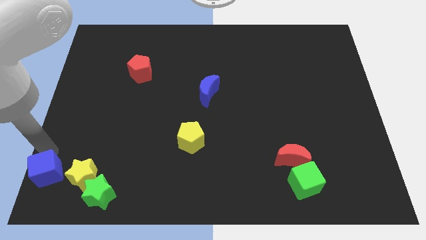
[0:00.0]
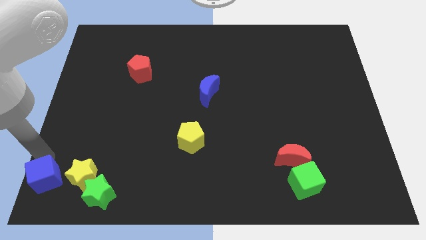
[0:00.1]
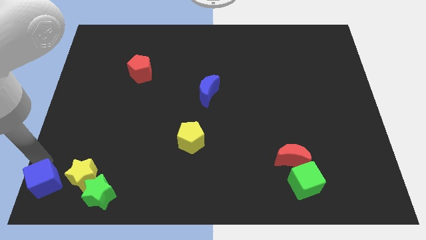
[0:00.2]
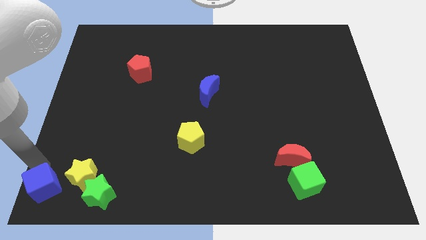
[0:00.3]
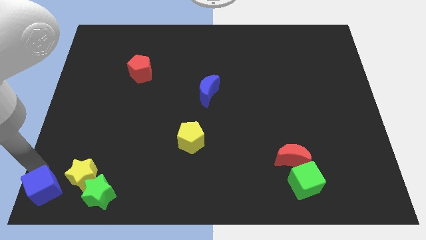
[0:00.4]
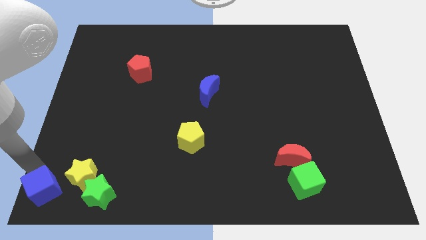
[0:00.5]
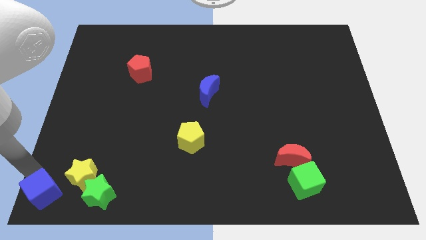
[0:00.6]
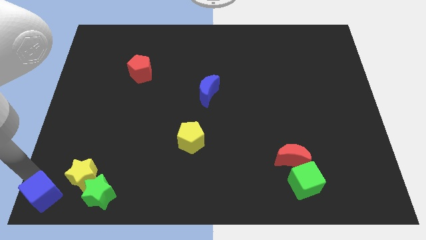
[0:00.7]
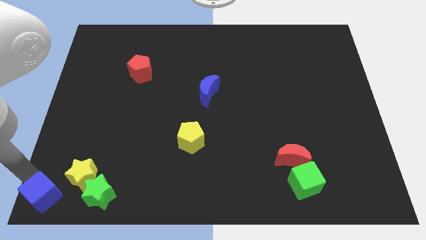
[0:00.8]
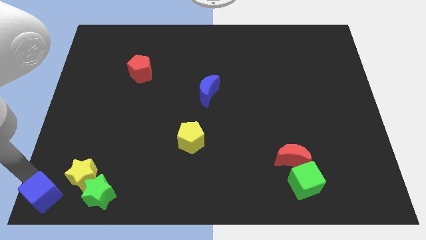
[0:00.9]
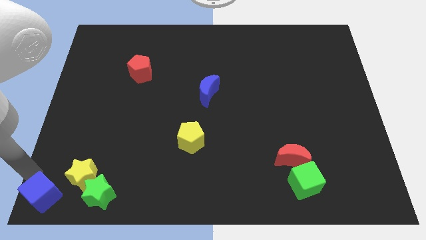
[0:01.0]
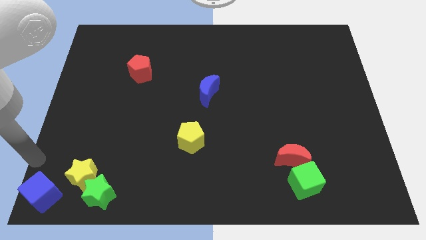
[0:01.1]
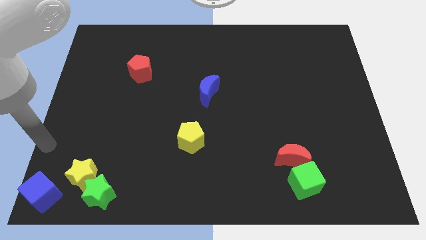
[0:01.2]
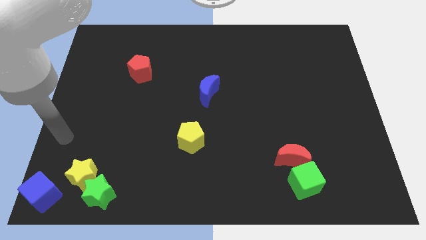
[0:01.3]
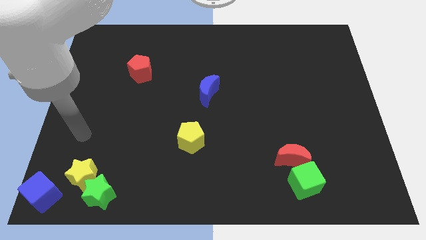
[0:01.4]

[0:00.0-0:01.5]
move the blue cube to the bottom left of the board

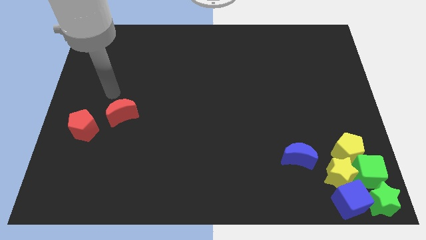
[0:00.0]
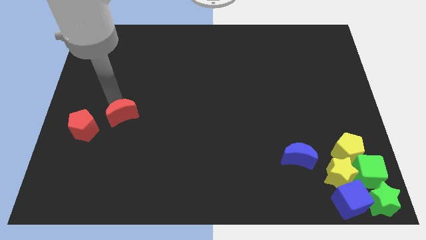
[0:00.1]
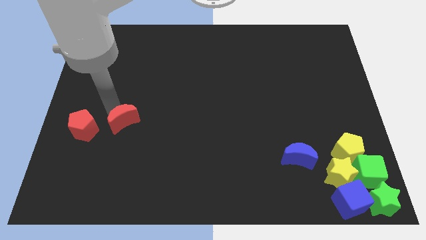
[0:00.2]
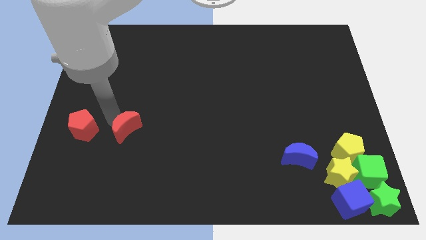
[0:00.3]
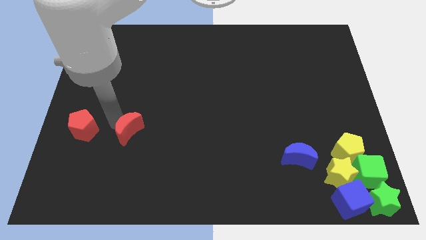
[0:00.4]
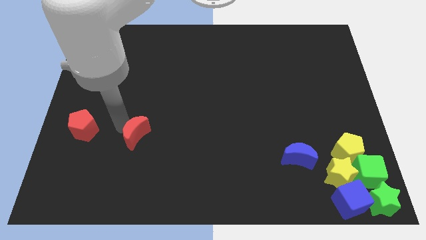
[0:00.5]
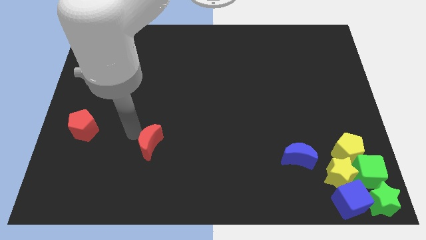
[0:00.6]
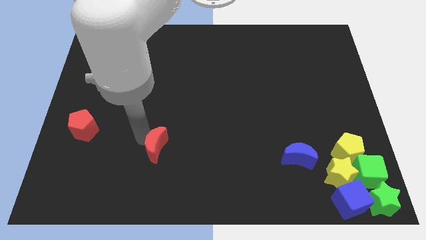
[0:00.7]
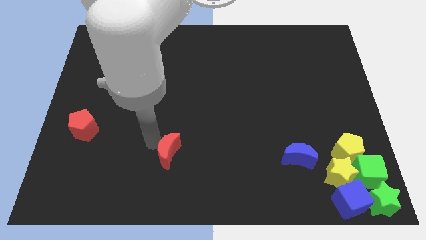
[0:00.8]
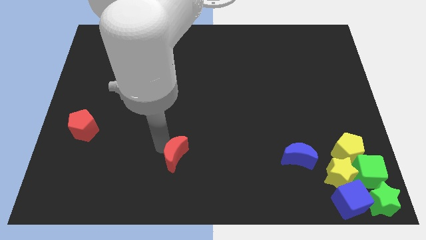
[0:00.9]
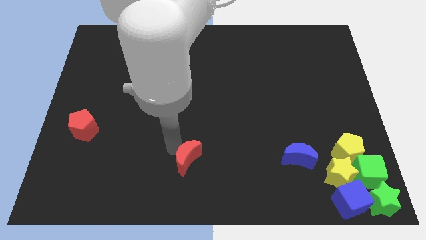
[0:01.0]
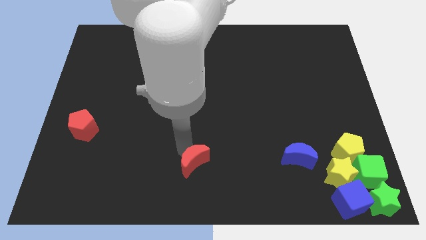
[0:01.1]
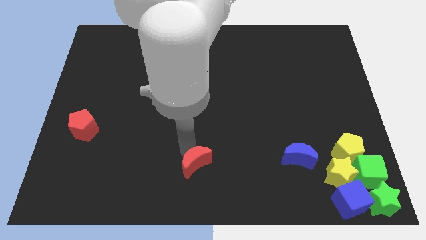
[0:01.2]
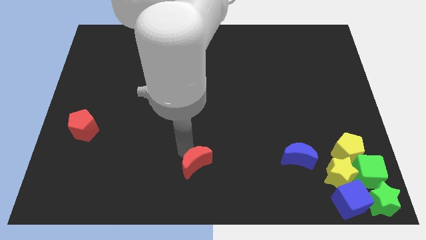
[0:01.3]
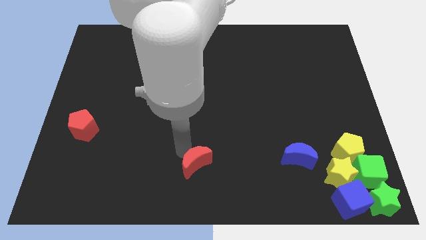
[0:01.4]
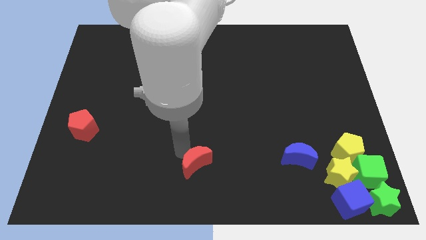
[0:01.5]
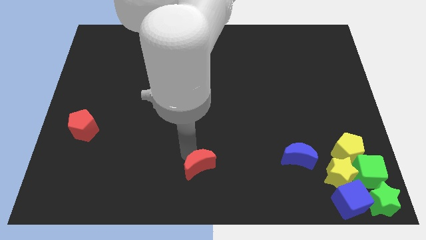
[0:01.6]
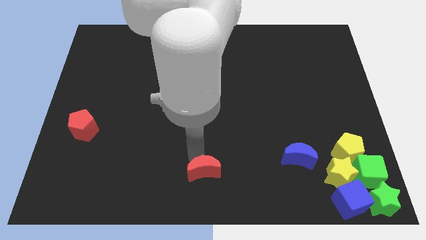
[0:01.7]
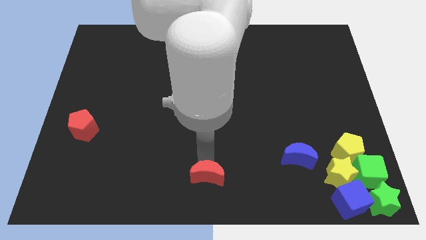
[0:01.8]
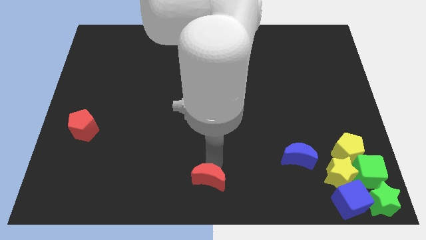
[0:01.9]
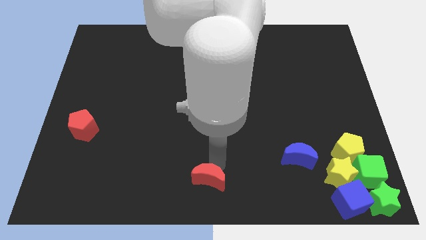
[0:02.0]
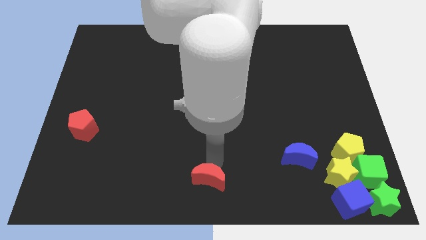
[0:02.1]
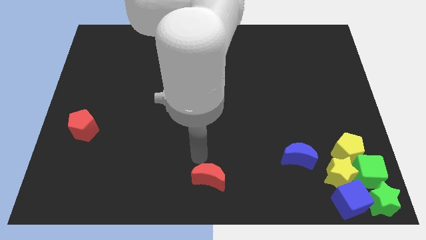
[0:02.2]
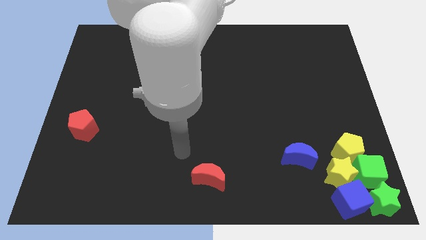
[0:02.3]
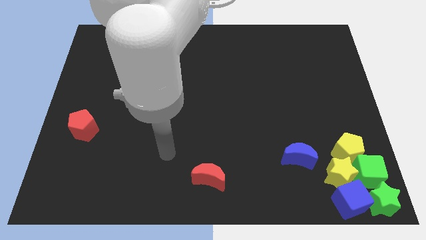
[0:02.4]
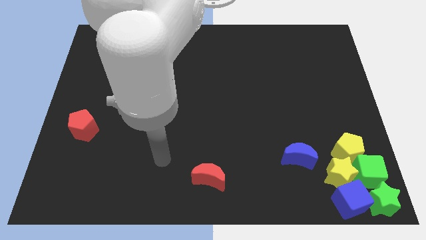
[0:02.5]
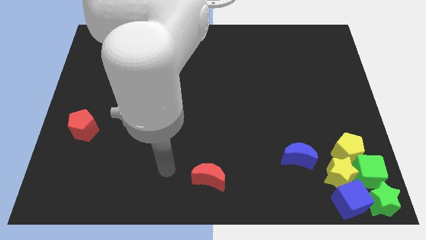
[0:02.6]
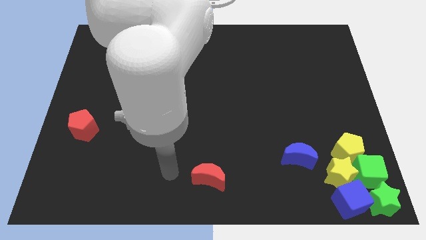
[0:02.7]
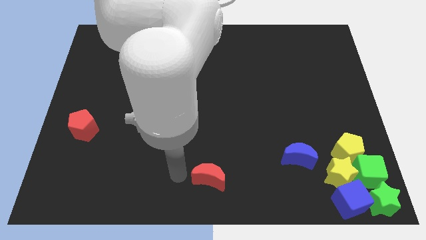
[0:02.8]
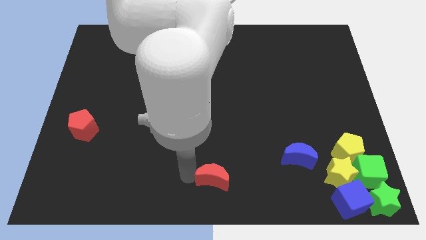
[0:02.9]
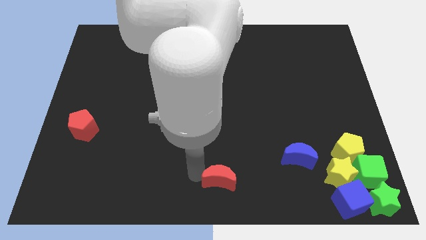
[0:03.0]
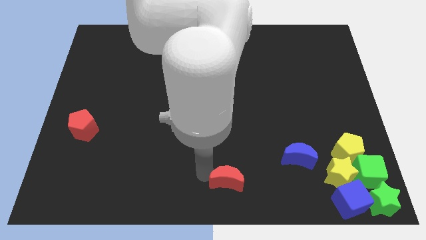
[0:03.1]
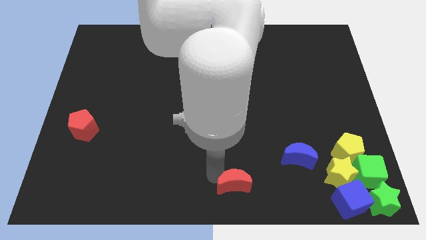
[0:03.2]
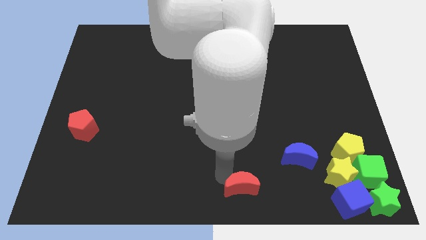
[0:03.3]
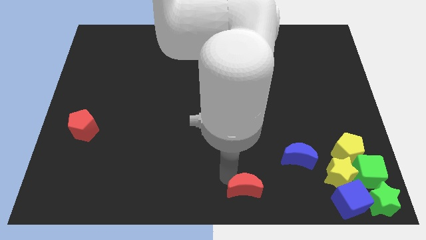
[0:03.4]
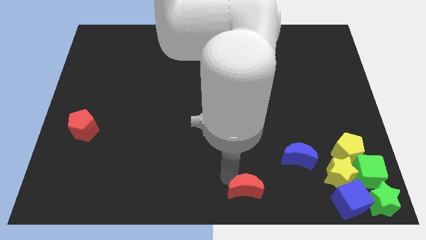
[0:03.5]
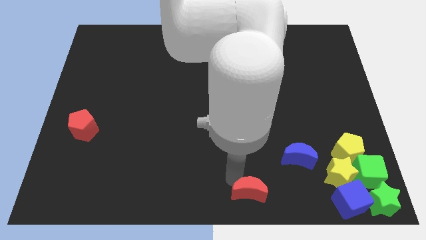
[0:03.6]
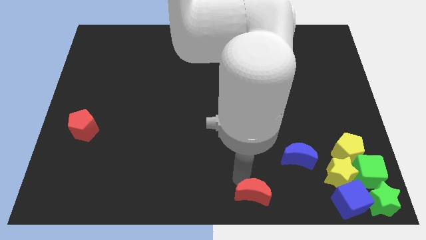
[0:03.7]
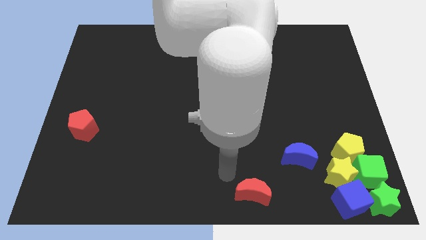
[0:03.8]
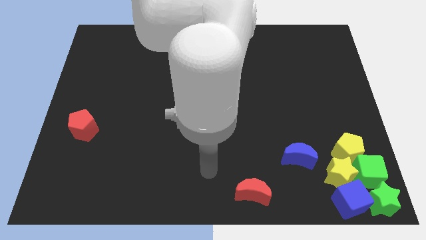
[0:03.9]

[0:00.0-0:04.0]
push the red crescent towards the bottom center of the board

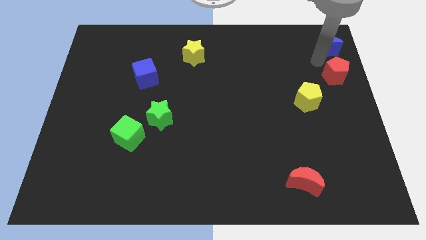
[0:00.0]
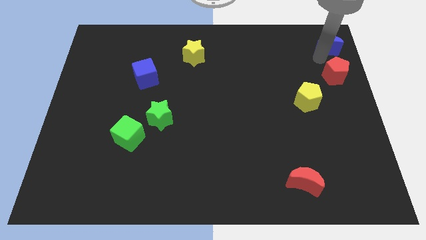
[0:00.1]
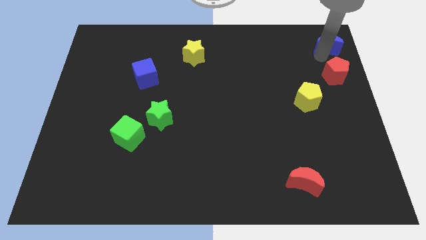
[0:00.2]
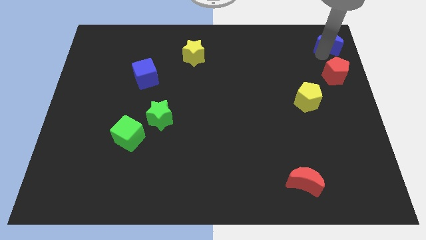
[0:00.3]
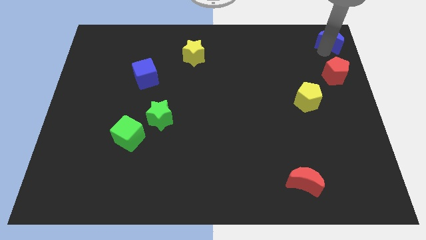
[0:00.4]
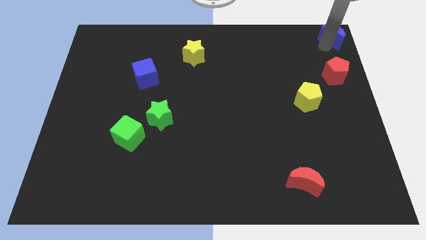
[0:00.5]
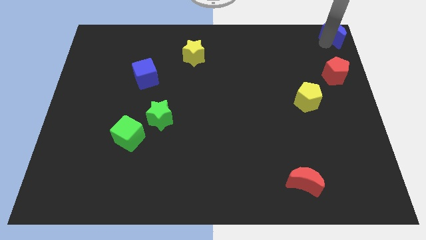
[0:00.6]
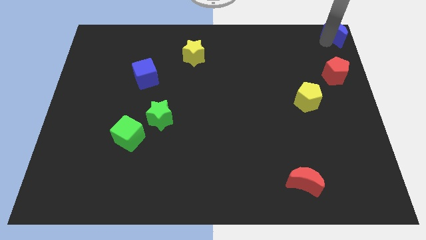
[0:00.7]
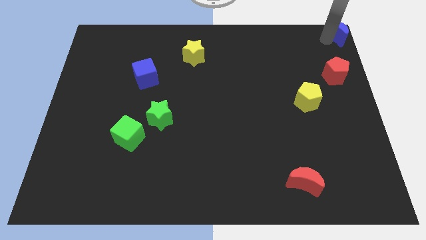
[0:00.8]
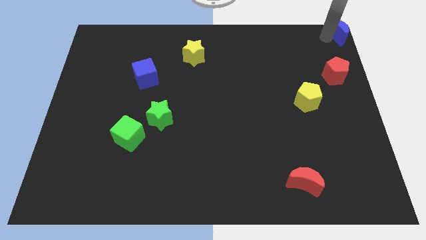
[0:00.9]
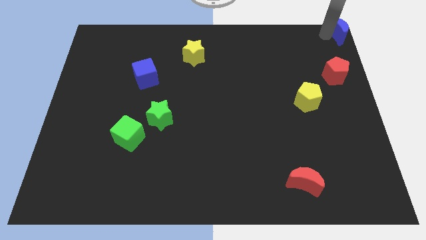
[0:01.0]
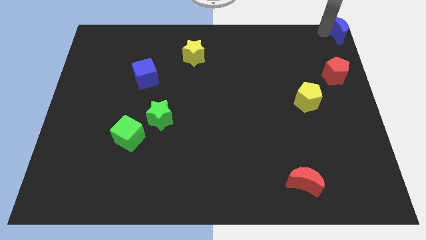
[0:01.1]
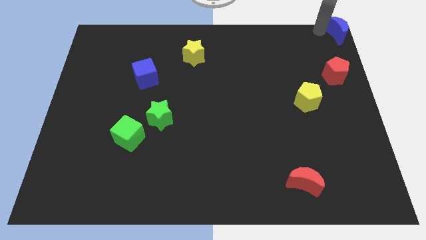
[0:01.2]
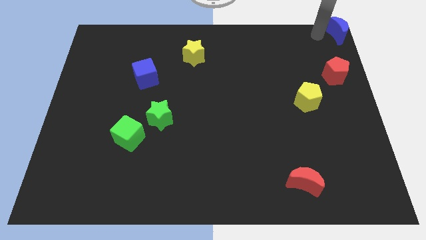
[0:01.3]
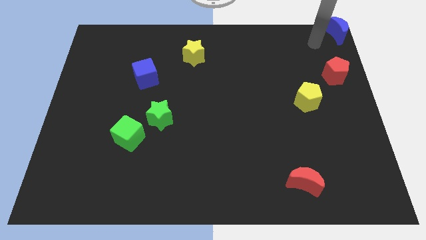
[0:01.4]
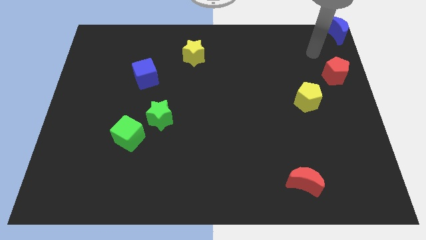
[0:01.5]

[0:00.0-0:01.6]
push the blue crescent to the top right corner of the board

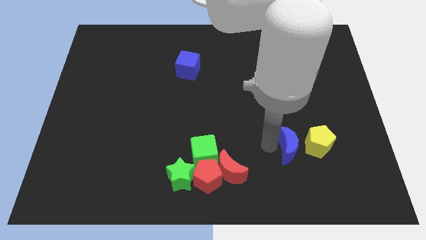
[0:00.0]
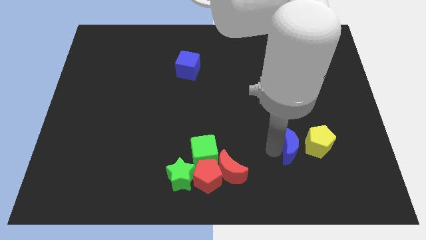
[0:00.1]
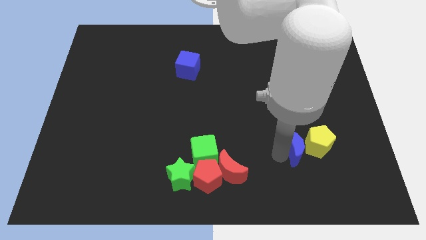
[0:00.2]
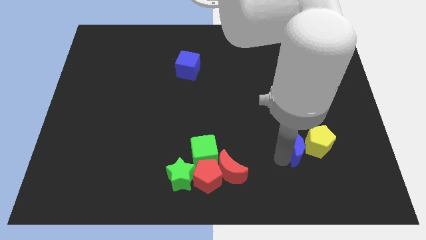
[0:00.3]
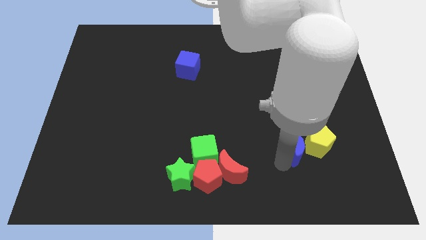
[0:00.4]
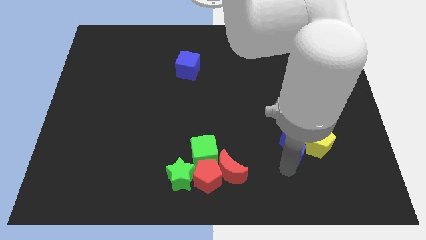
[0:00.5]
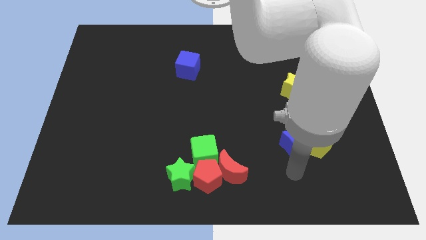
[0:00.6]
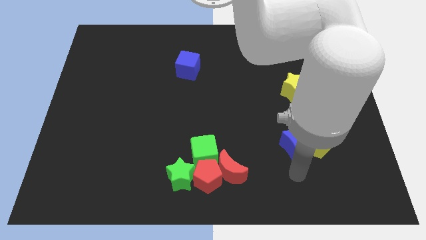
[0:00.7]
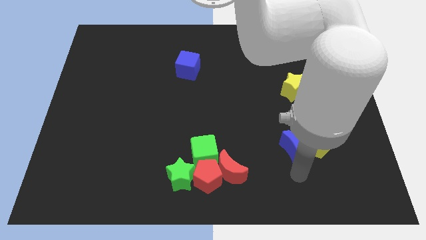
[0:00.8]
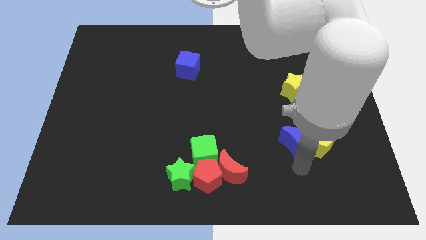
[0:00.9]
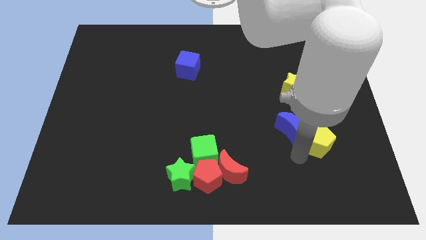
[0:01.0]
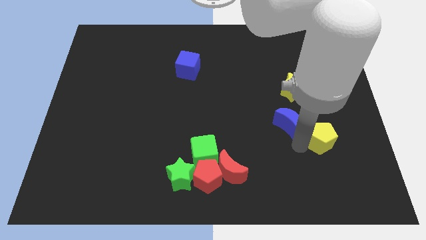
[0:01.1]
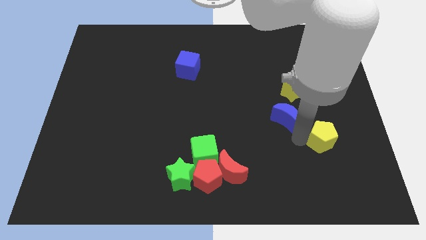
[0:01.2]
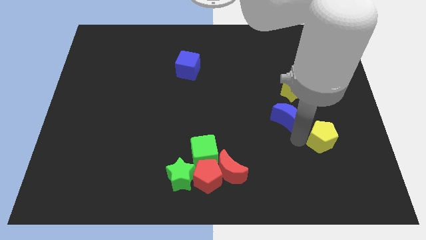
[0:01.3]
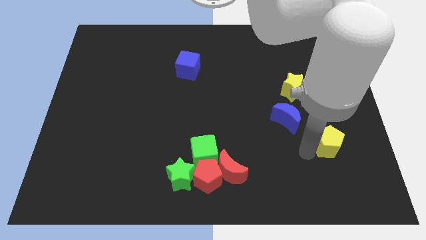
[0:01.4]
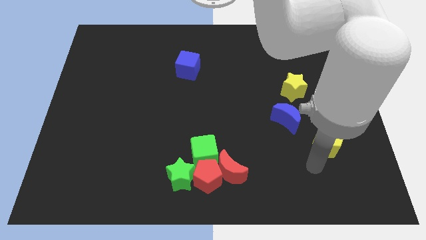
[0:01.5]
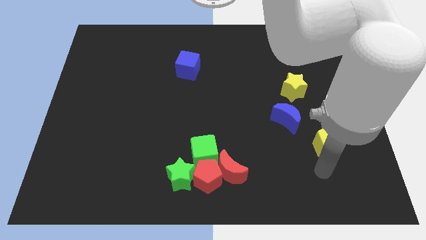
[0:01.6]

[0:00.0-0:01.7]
push the blue cube close to the yellow star

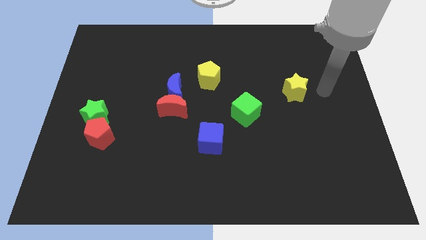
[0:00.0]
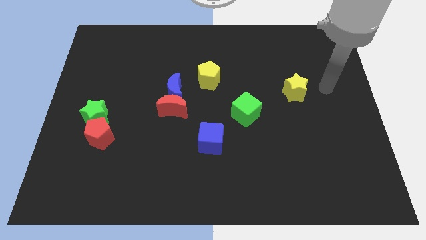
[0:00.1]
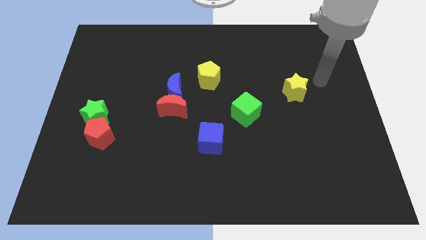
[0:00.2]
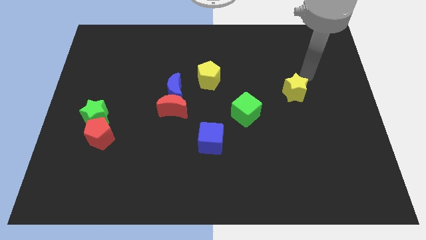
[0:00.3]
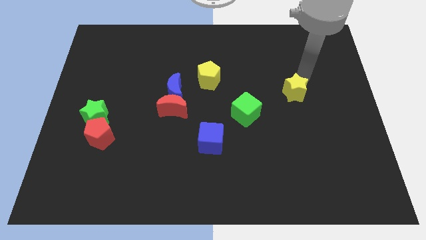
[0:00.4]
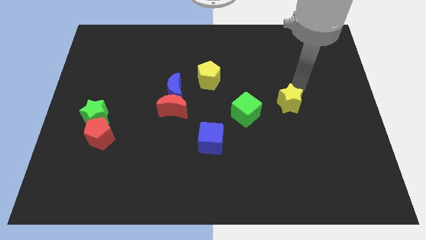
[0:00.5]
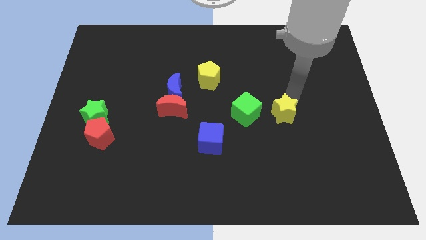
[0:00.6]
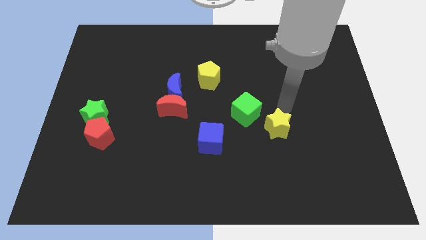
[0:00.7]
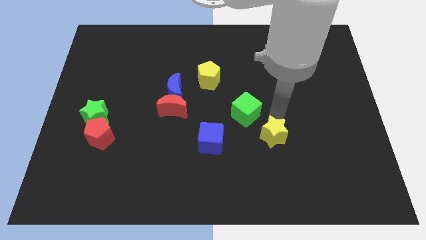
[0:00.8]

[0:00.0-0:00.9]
place the yellow star below the green cube
